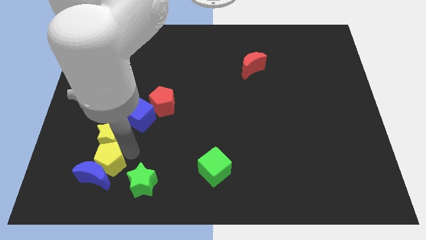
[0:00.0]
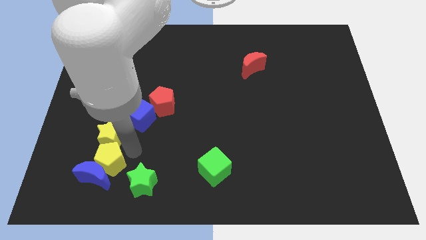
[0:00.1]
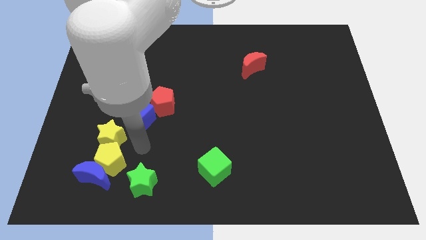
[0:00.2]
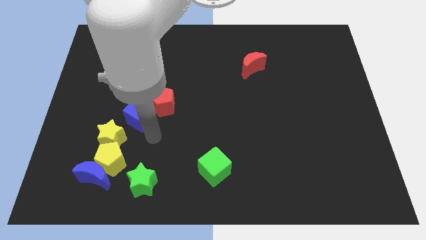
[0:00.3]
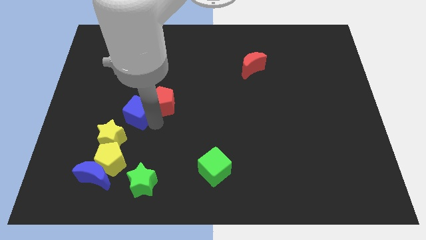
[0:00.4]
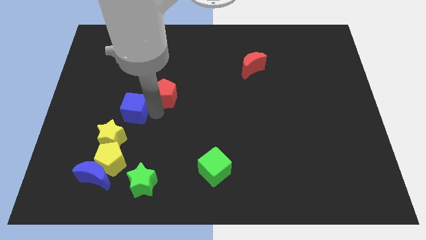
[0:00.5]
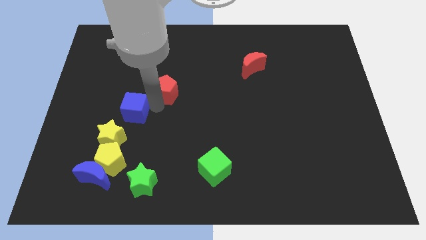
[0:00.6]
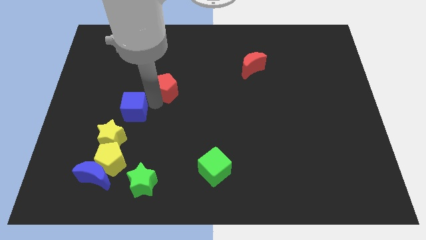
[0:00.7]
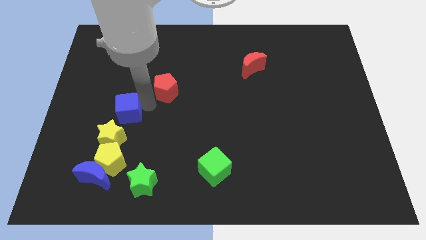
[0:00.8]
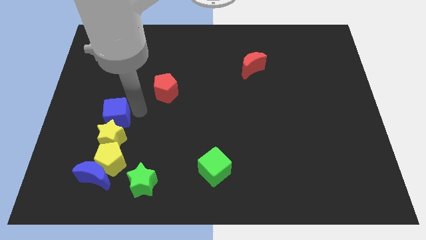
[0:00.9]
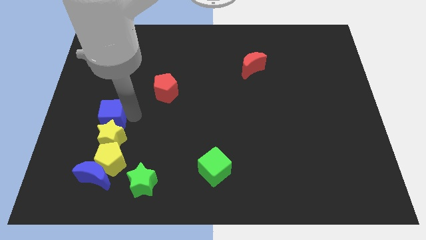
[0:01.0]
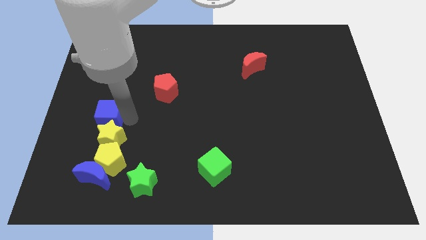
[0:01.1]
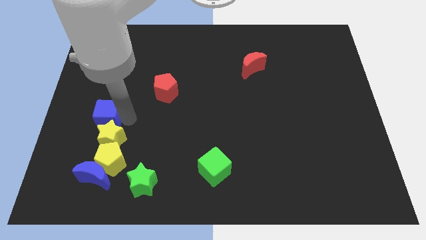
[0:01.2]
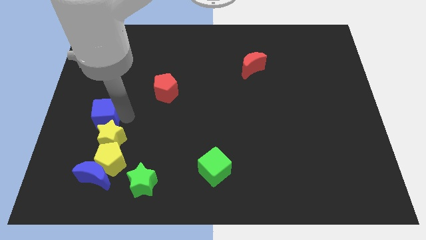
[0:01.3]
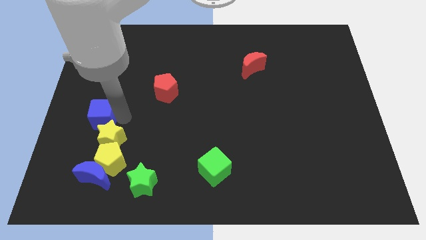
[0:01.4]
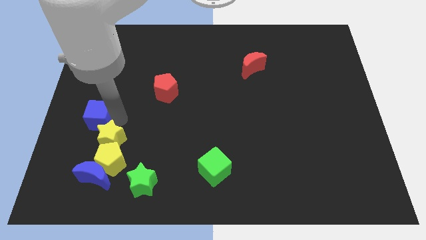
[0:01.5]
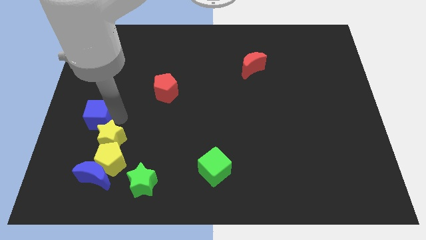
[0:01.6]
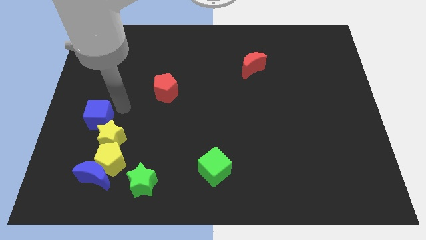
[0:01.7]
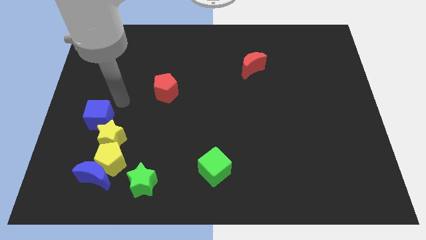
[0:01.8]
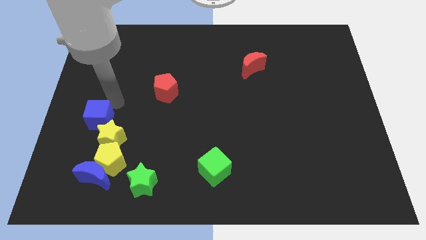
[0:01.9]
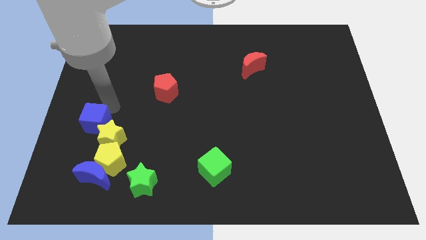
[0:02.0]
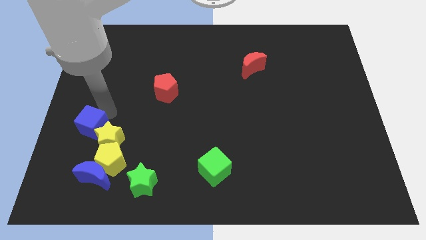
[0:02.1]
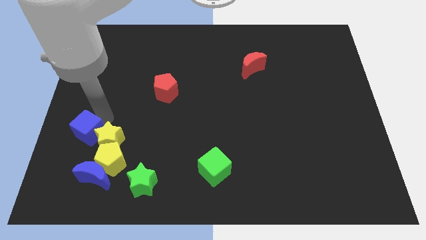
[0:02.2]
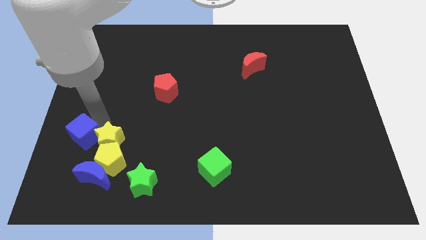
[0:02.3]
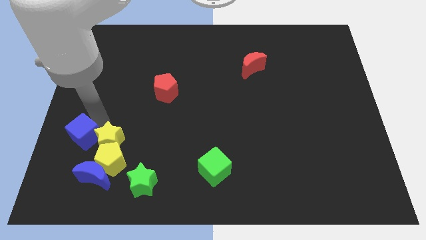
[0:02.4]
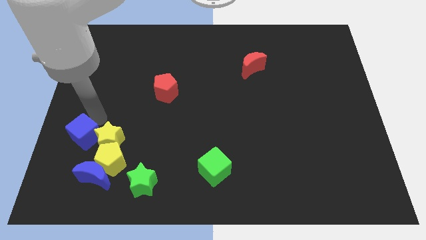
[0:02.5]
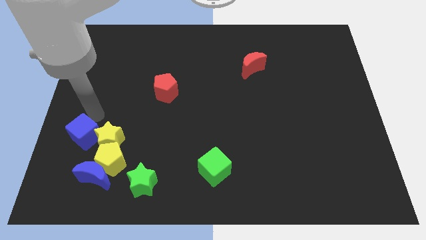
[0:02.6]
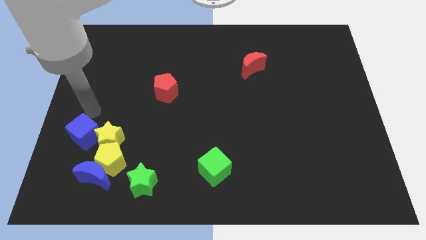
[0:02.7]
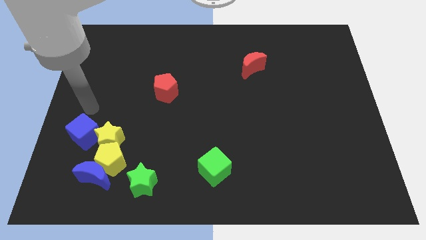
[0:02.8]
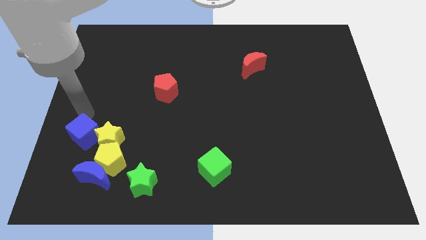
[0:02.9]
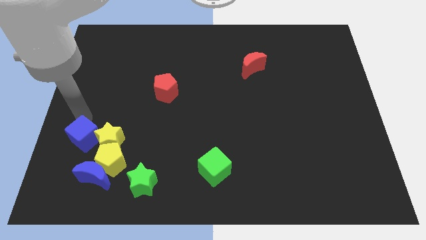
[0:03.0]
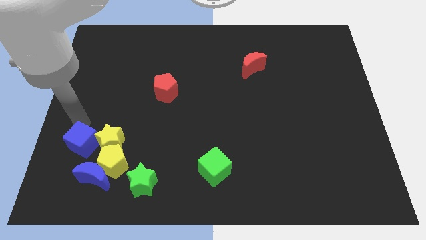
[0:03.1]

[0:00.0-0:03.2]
move the blue cube into the left side of the yellow star

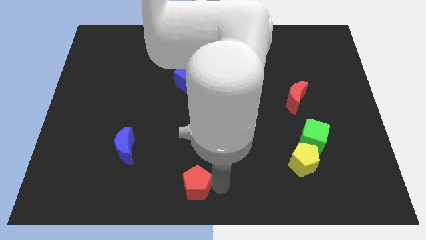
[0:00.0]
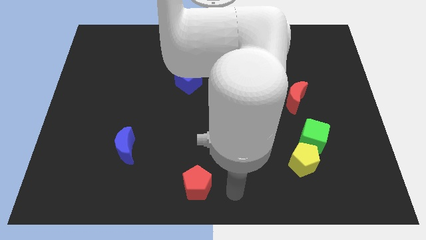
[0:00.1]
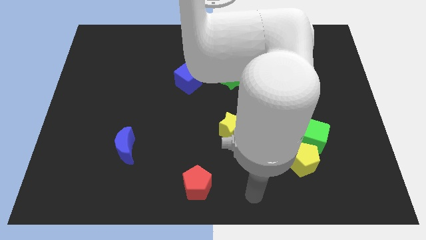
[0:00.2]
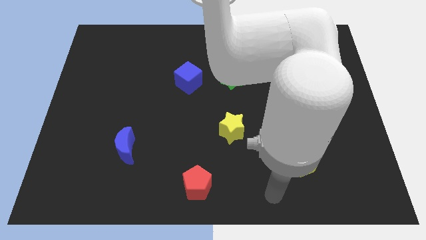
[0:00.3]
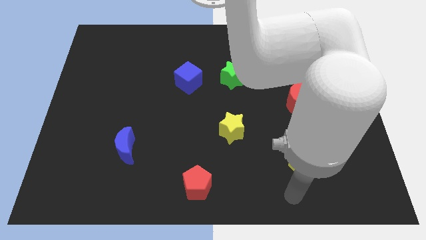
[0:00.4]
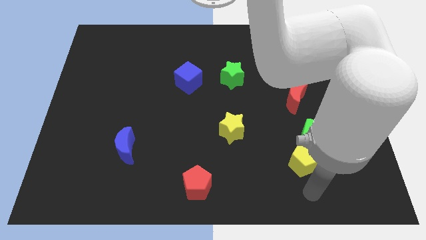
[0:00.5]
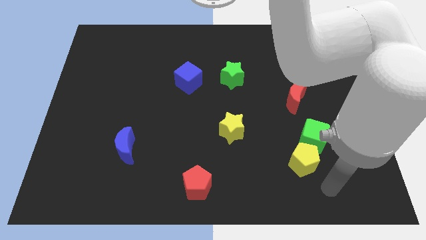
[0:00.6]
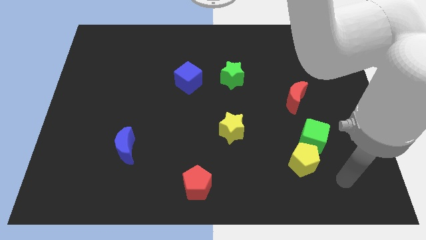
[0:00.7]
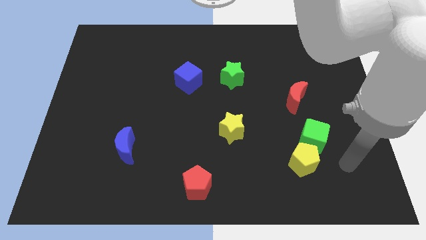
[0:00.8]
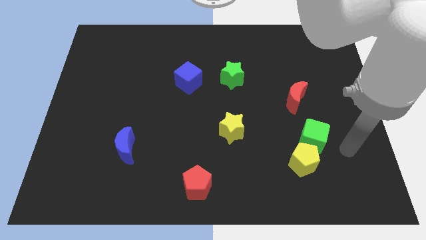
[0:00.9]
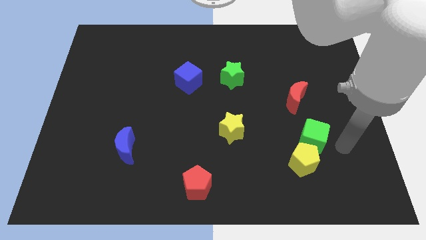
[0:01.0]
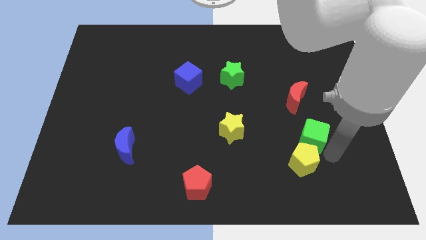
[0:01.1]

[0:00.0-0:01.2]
place the arm away from the red pentagon

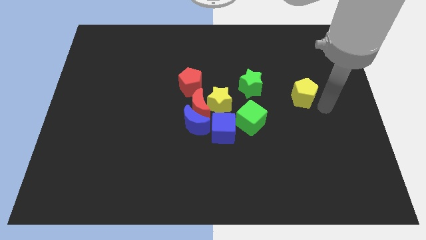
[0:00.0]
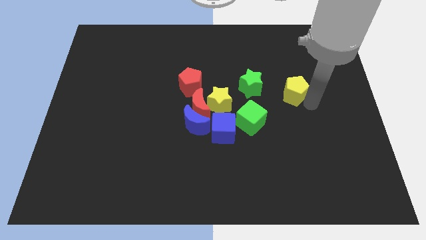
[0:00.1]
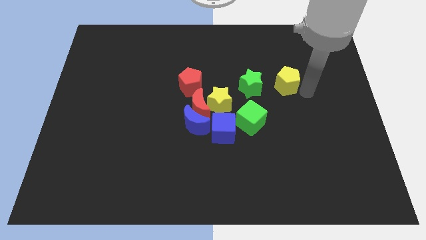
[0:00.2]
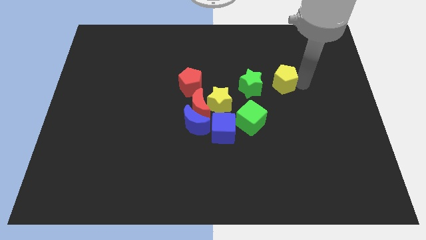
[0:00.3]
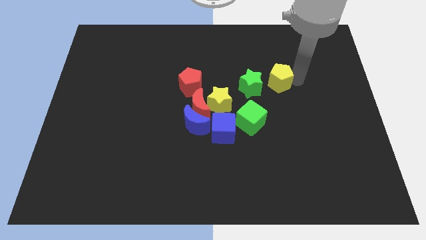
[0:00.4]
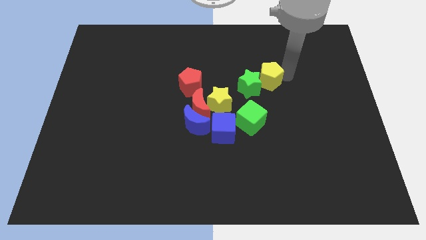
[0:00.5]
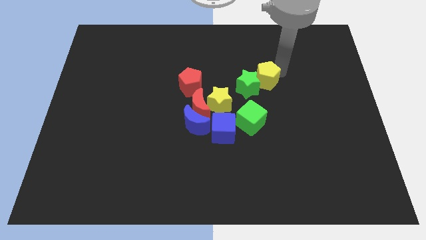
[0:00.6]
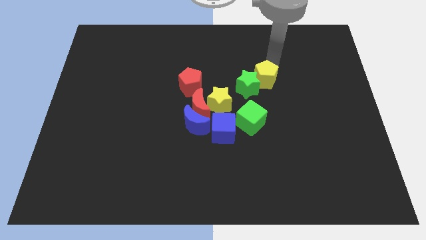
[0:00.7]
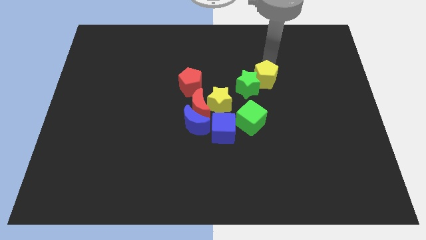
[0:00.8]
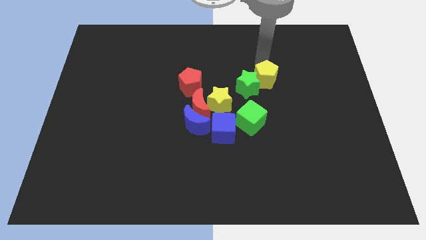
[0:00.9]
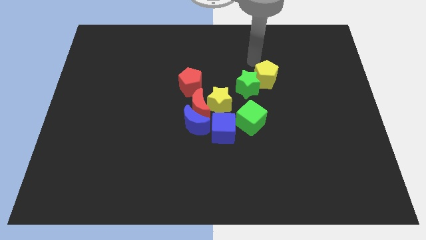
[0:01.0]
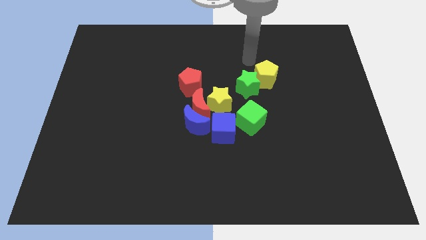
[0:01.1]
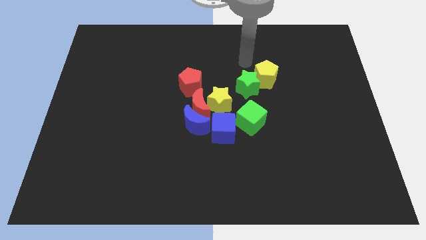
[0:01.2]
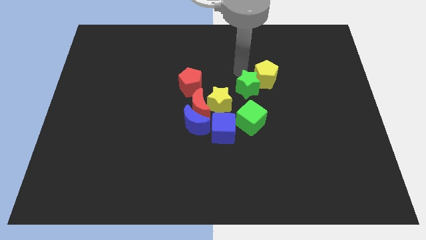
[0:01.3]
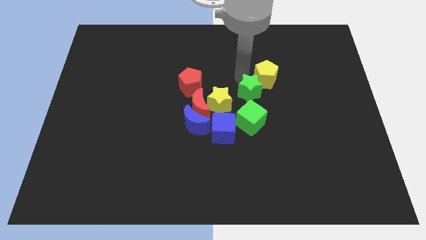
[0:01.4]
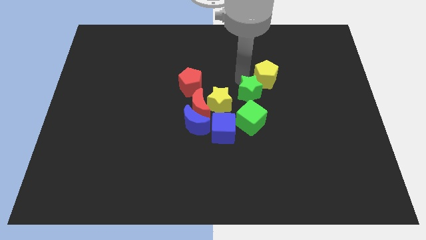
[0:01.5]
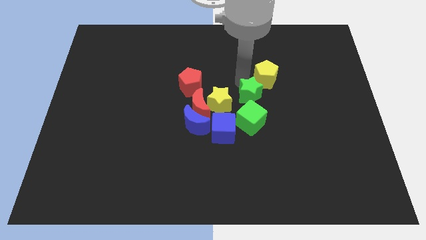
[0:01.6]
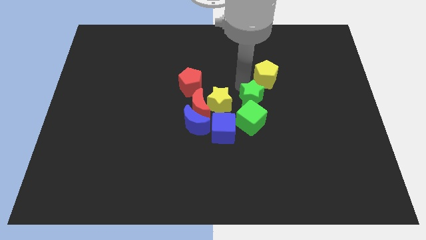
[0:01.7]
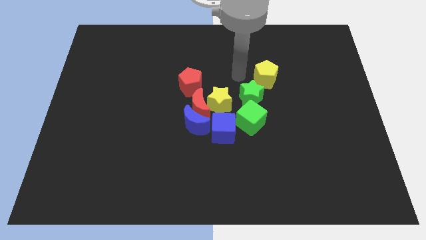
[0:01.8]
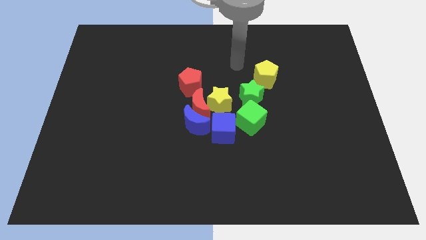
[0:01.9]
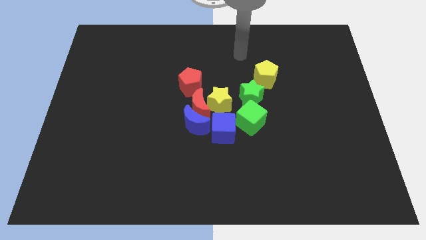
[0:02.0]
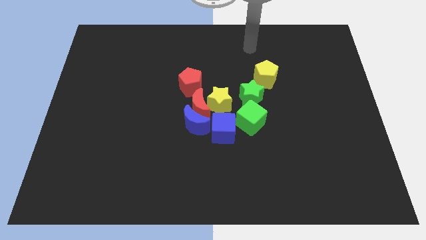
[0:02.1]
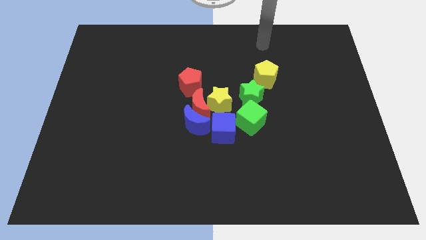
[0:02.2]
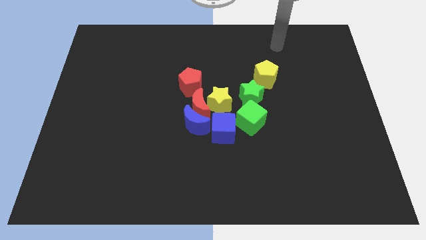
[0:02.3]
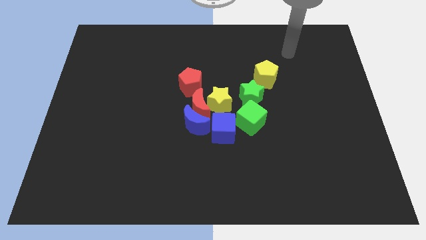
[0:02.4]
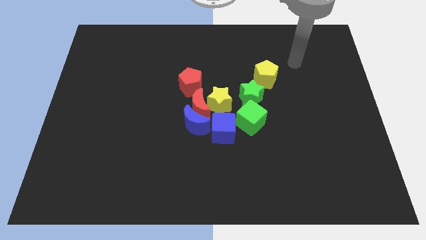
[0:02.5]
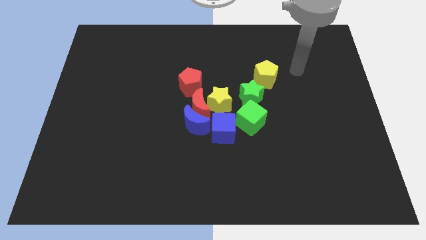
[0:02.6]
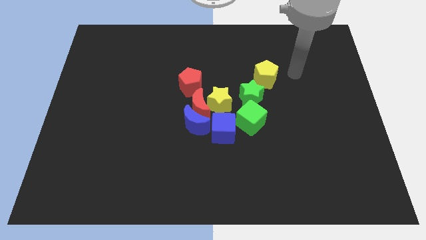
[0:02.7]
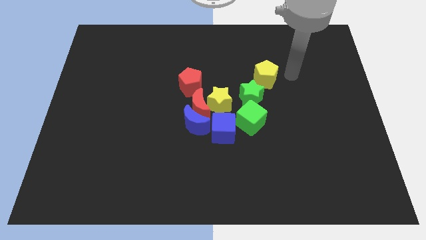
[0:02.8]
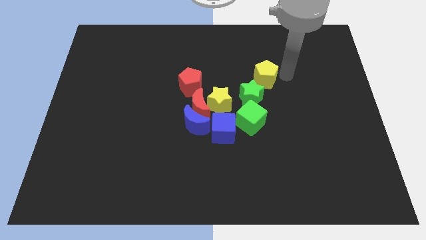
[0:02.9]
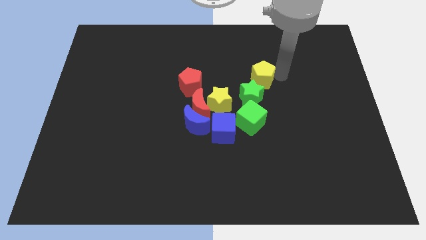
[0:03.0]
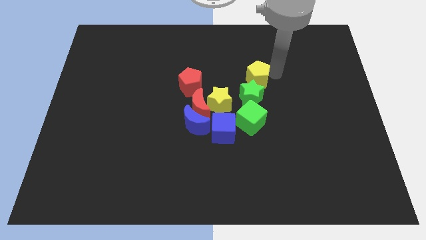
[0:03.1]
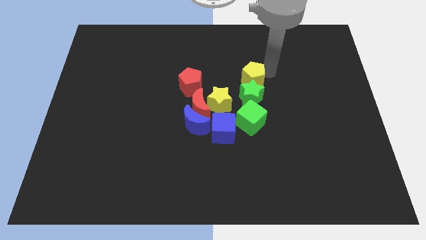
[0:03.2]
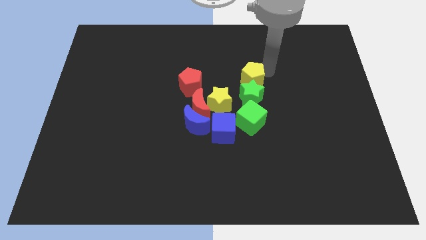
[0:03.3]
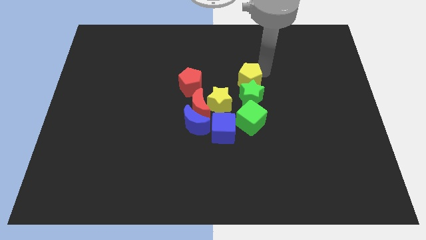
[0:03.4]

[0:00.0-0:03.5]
make a vertical line with the green blocks and yellow pentagon at the right side of the group of blocks

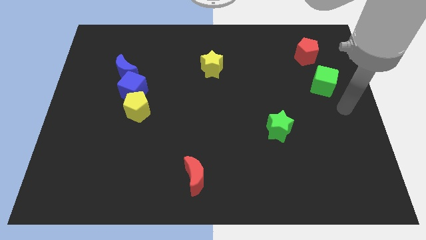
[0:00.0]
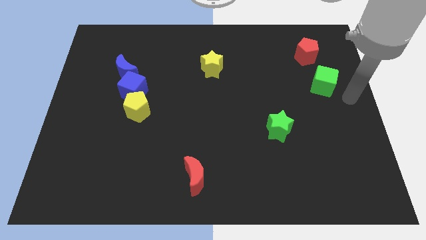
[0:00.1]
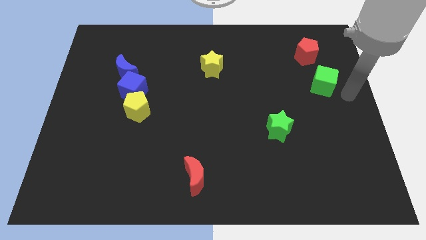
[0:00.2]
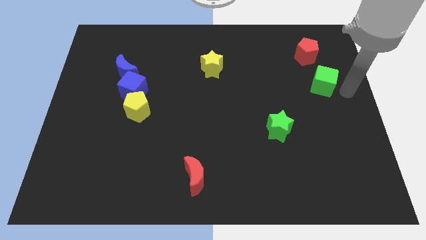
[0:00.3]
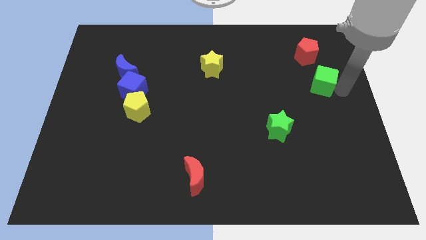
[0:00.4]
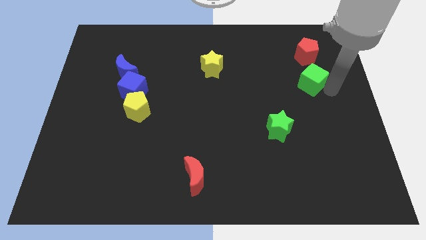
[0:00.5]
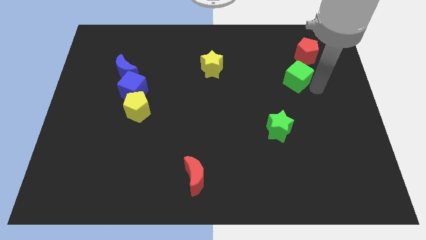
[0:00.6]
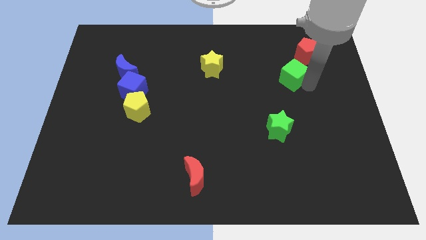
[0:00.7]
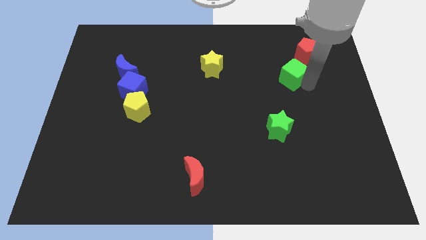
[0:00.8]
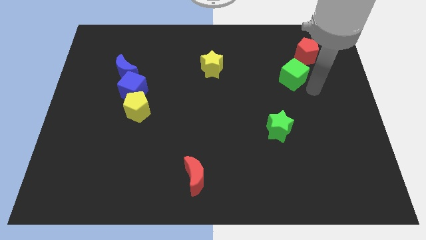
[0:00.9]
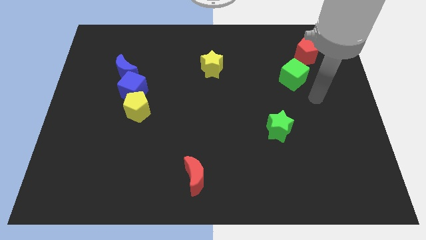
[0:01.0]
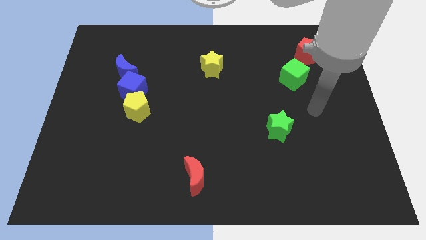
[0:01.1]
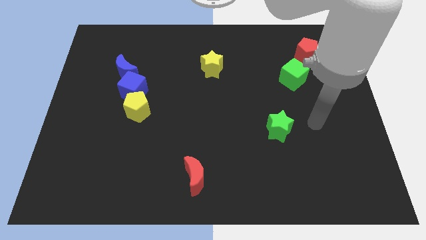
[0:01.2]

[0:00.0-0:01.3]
place the green cube in between the green star and red pentagon
